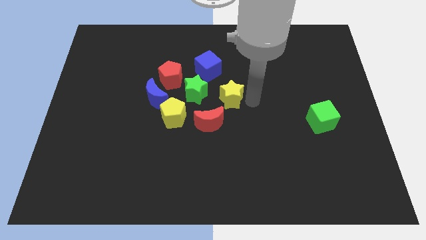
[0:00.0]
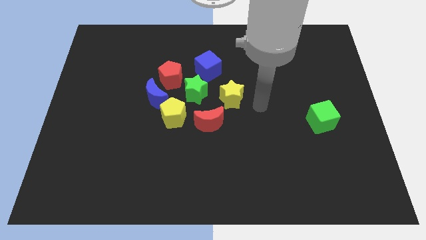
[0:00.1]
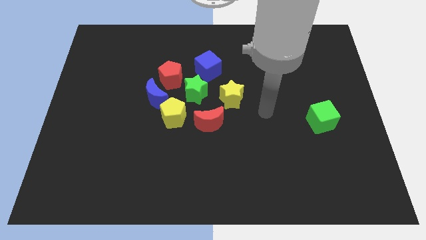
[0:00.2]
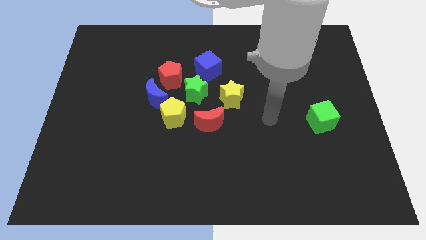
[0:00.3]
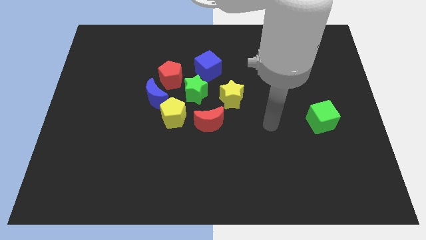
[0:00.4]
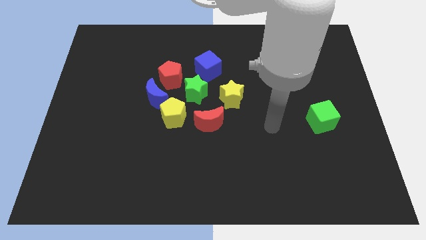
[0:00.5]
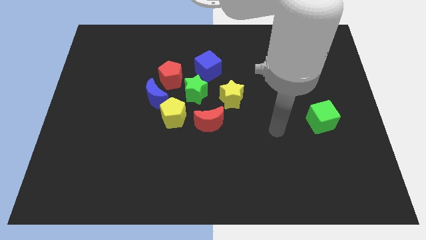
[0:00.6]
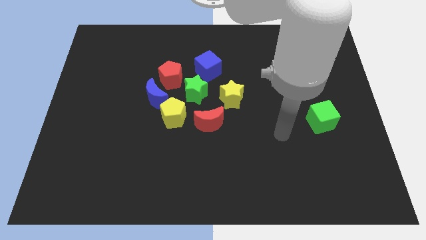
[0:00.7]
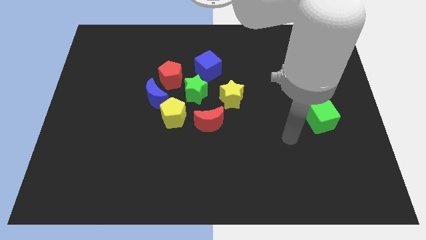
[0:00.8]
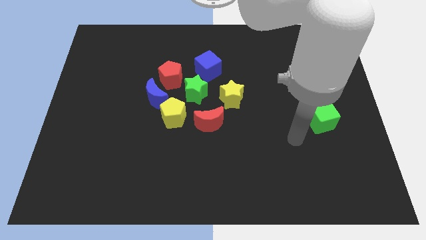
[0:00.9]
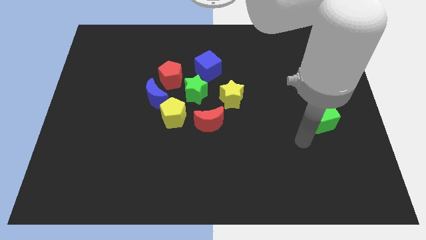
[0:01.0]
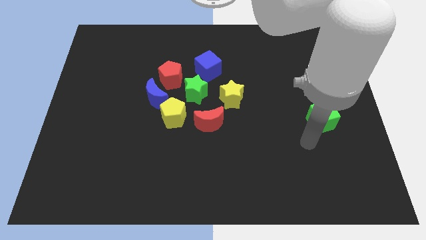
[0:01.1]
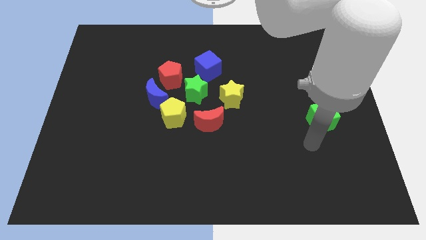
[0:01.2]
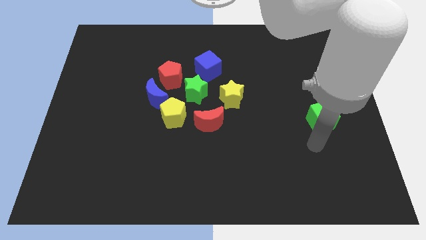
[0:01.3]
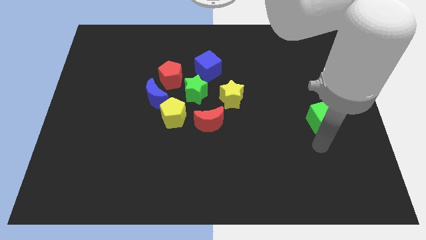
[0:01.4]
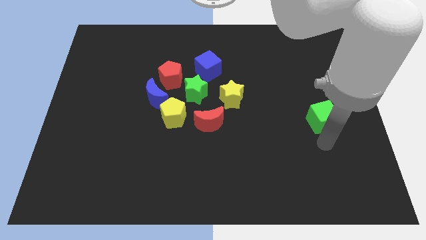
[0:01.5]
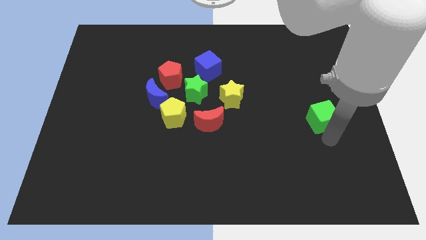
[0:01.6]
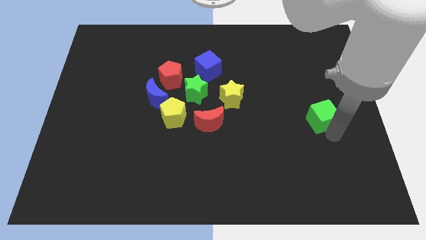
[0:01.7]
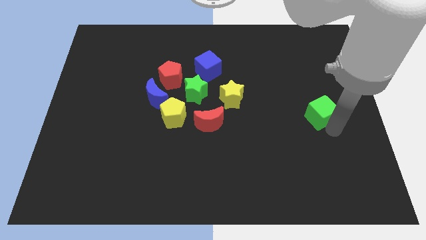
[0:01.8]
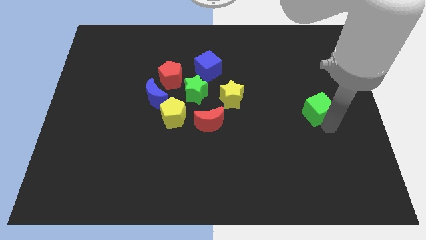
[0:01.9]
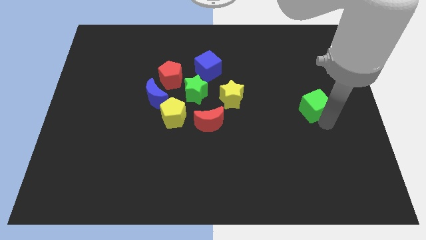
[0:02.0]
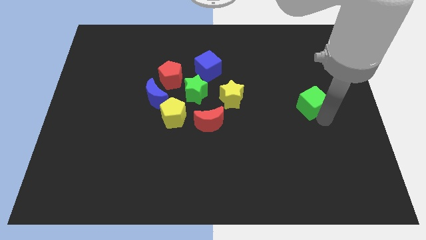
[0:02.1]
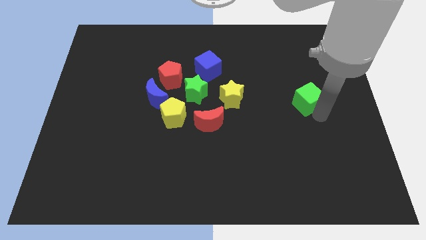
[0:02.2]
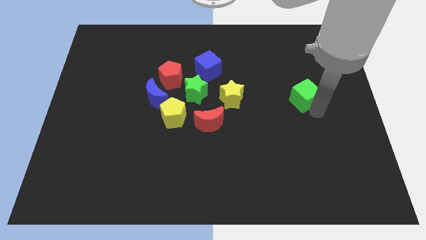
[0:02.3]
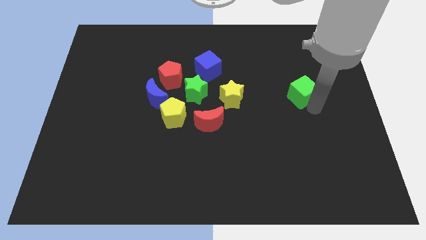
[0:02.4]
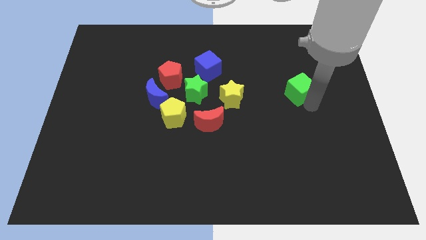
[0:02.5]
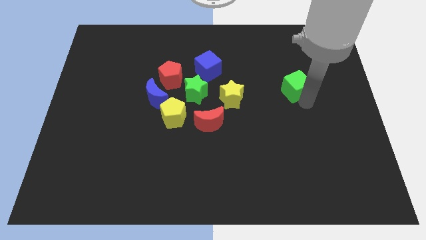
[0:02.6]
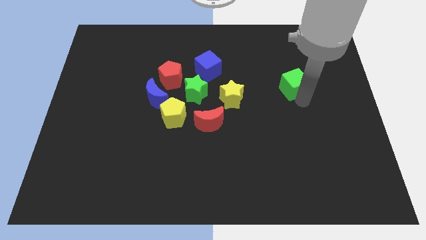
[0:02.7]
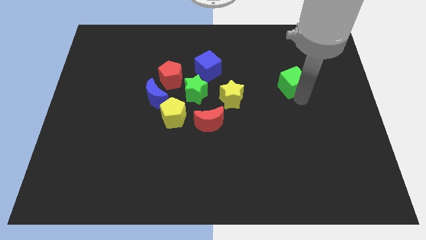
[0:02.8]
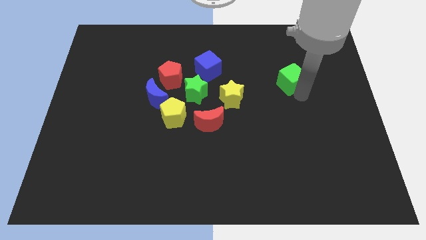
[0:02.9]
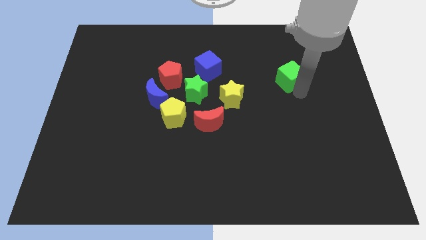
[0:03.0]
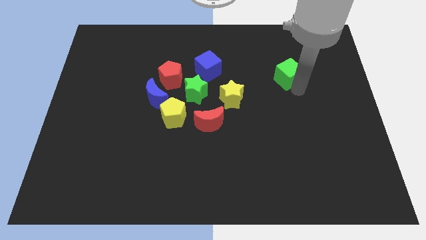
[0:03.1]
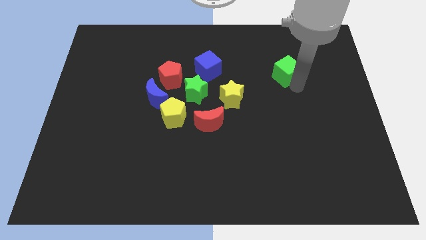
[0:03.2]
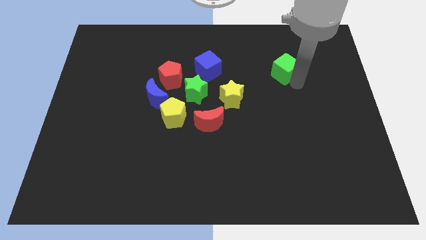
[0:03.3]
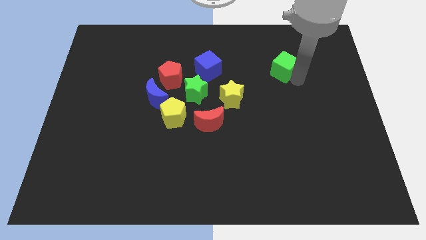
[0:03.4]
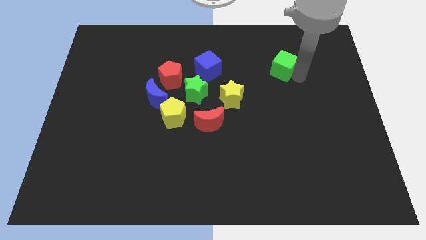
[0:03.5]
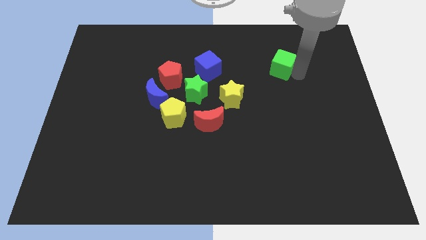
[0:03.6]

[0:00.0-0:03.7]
place the green cube parallel right to the blue cube

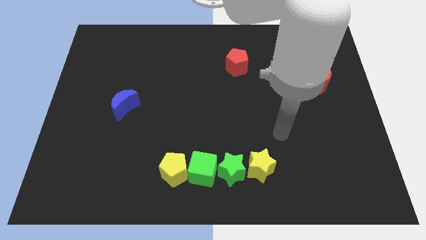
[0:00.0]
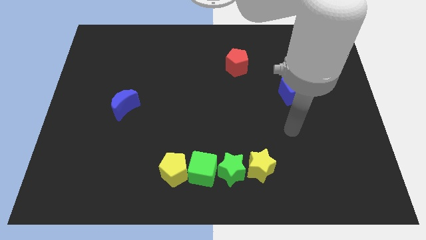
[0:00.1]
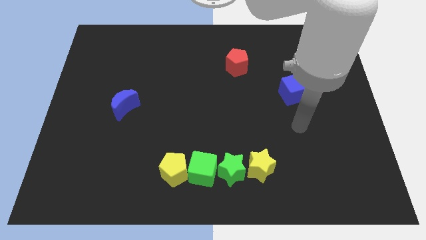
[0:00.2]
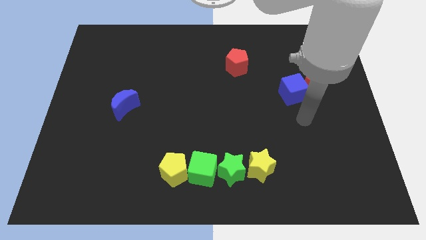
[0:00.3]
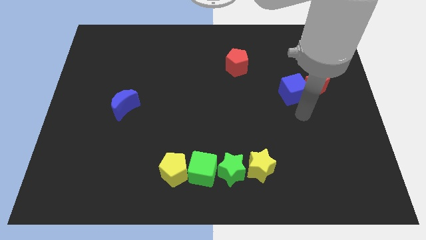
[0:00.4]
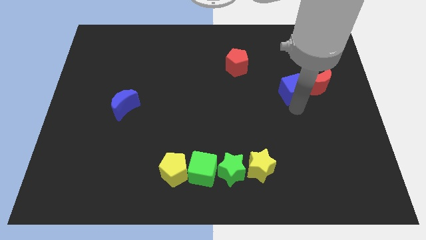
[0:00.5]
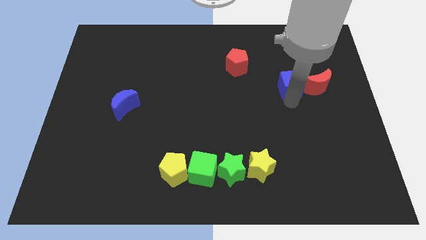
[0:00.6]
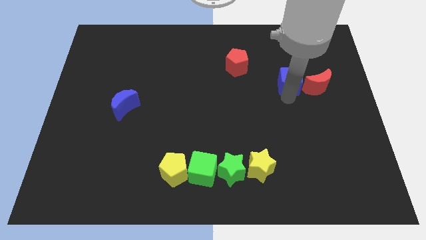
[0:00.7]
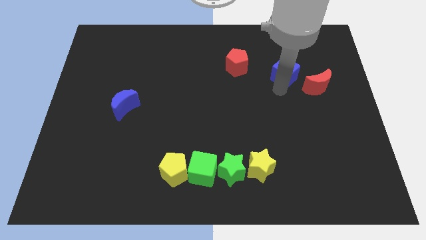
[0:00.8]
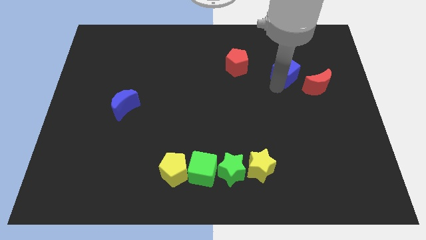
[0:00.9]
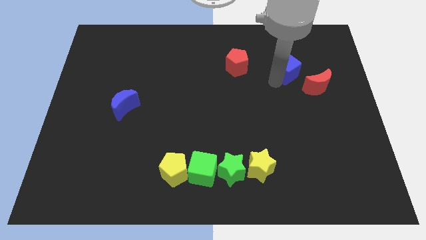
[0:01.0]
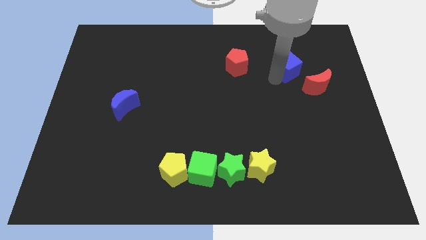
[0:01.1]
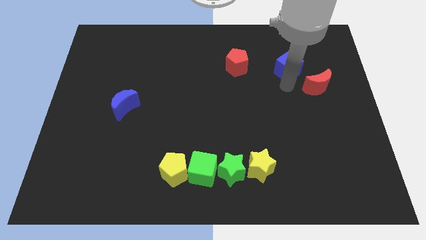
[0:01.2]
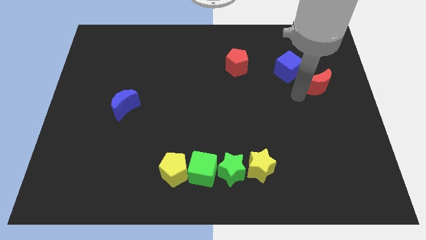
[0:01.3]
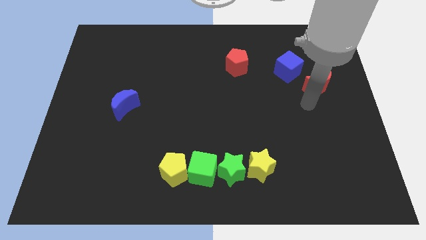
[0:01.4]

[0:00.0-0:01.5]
slightly move the blue cube away from the red crescent

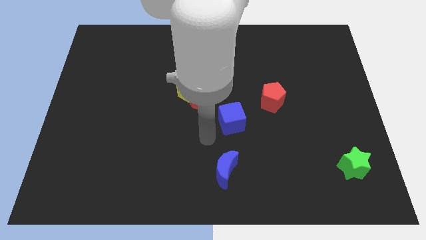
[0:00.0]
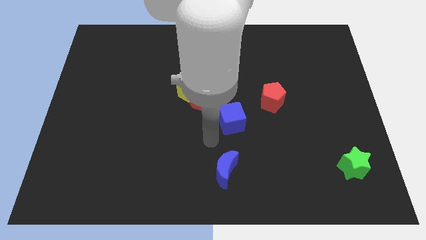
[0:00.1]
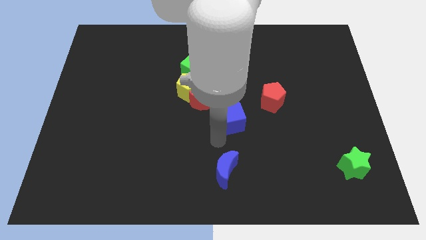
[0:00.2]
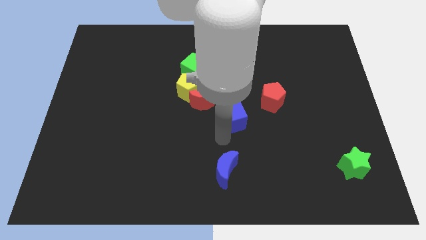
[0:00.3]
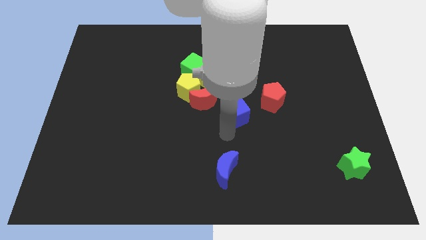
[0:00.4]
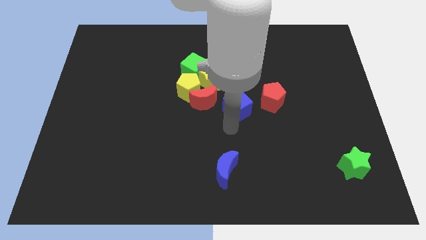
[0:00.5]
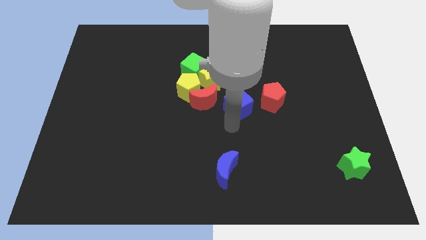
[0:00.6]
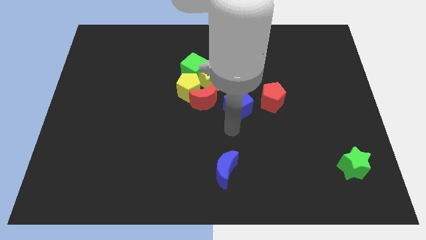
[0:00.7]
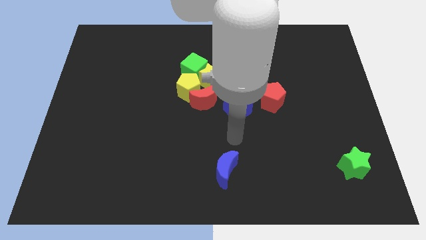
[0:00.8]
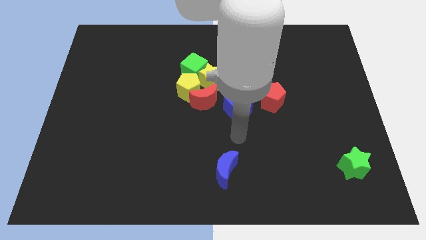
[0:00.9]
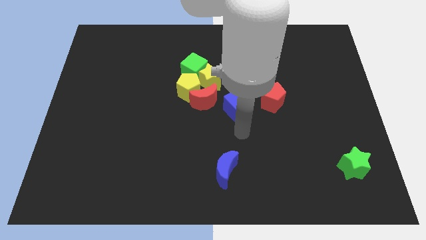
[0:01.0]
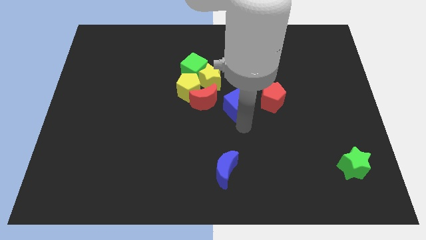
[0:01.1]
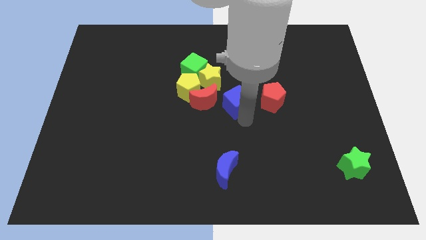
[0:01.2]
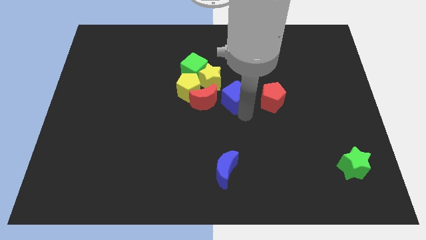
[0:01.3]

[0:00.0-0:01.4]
put the blue cube parallel right to the red moon

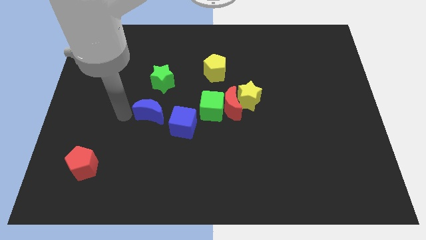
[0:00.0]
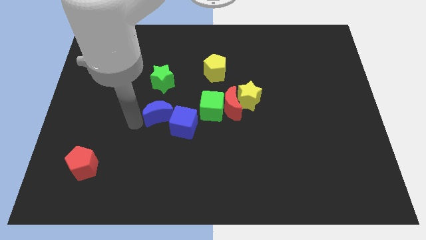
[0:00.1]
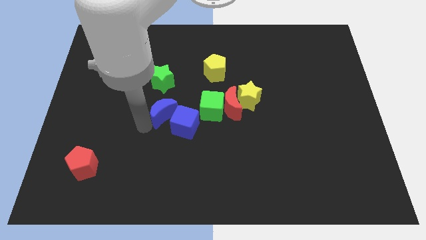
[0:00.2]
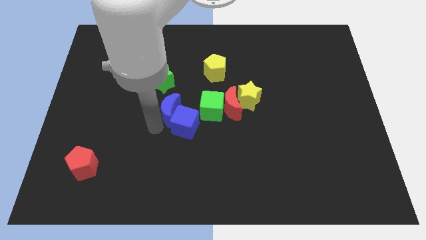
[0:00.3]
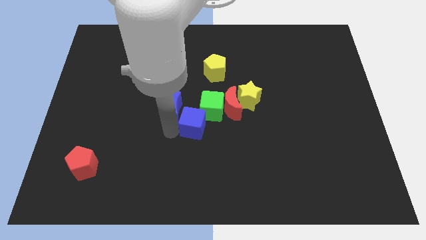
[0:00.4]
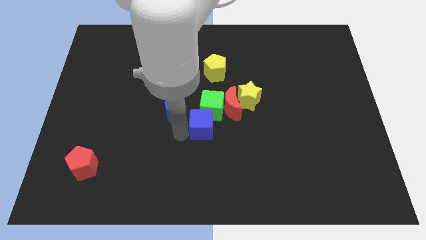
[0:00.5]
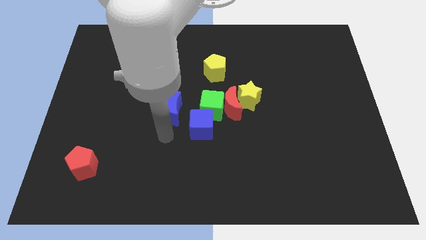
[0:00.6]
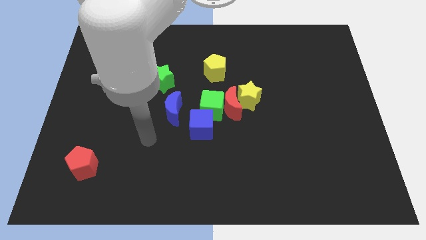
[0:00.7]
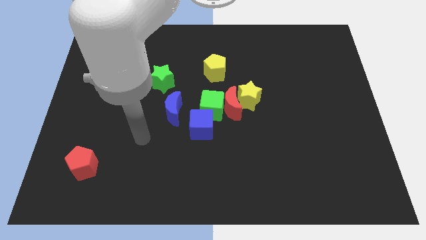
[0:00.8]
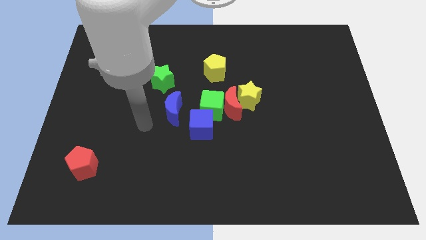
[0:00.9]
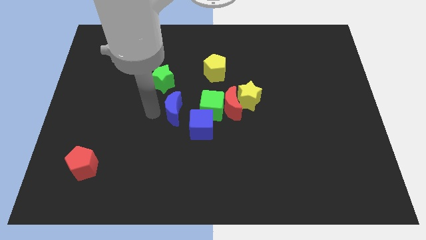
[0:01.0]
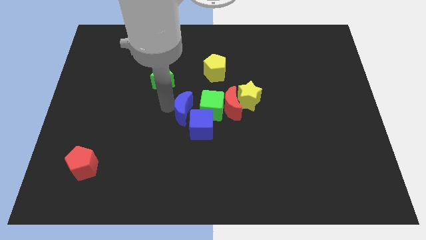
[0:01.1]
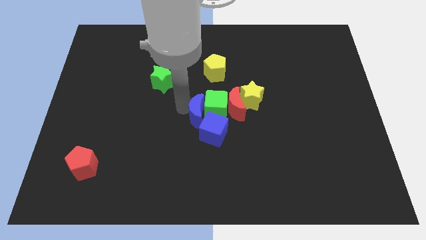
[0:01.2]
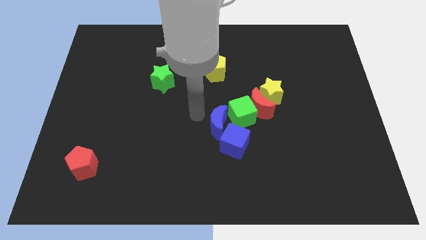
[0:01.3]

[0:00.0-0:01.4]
push the blue moon into the green cube

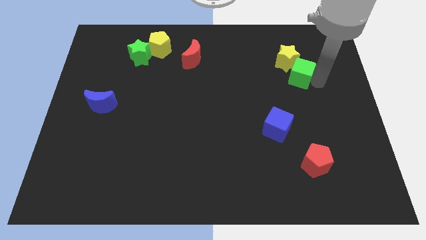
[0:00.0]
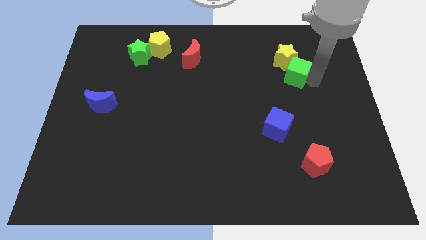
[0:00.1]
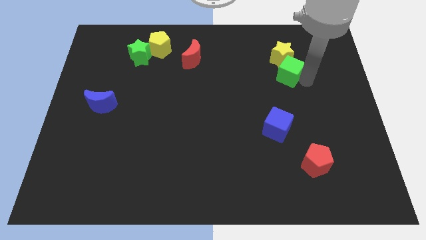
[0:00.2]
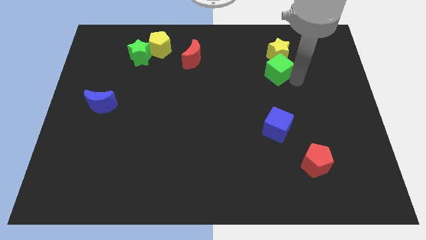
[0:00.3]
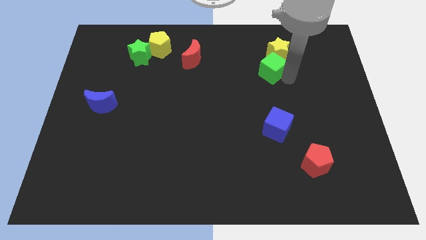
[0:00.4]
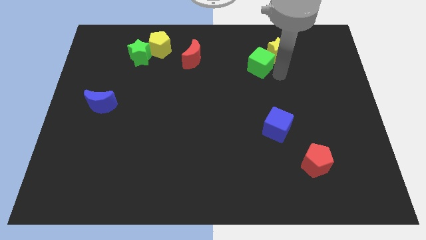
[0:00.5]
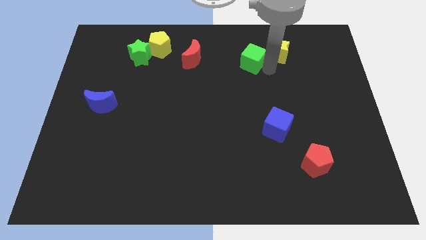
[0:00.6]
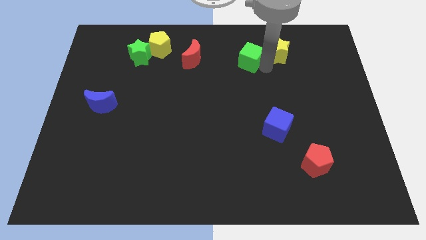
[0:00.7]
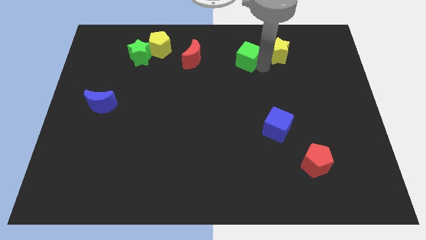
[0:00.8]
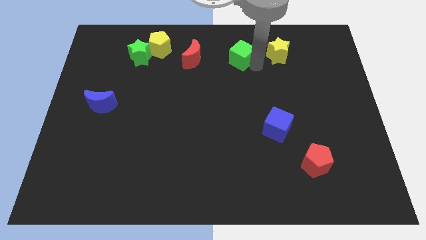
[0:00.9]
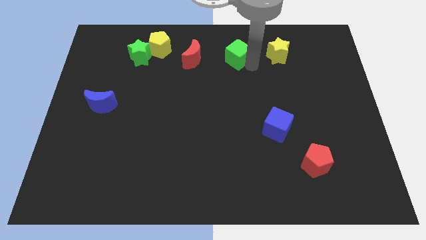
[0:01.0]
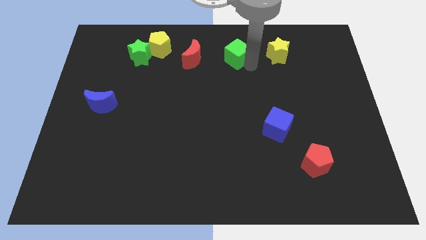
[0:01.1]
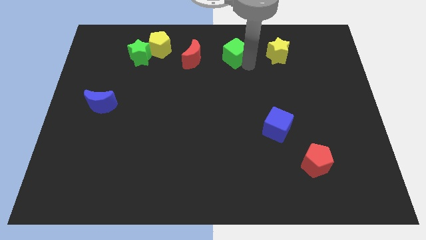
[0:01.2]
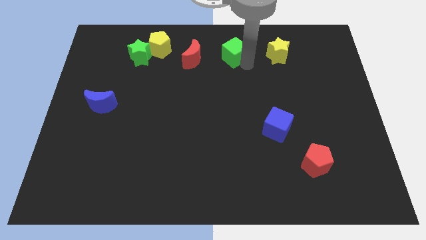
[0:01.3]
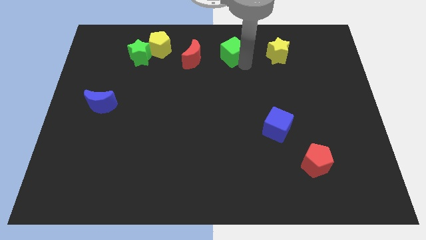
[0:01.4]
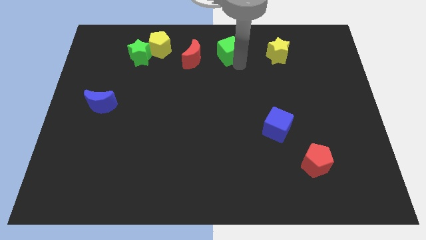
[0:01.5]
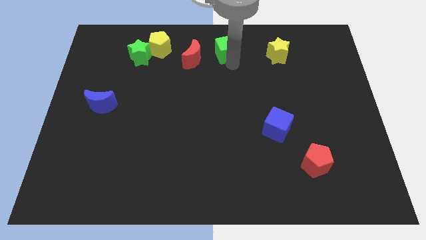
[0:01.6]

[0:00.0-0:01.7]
push the green cube diagonally upwards beside the red moon
